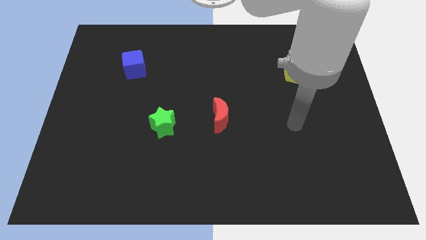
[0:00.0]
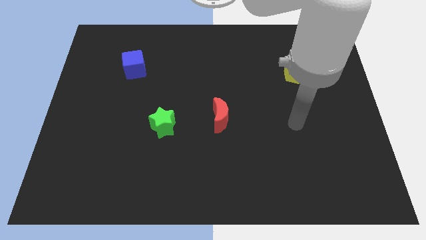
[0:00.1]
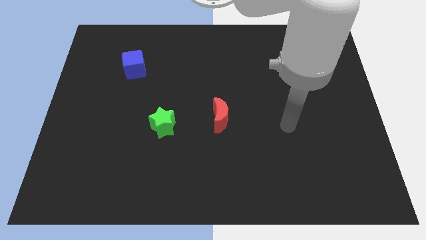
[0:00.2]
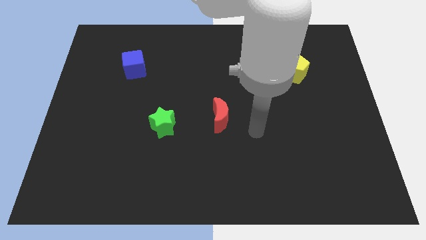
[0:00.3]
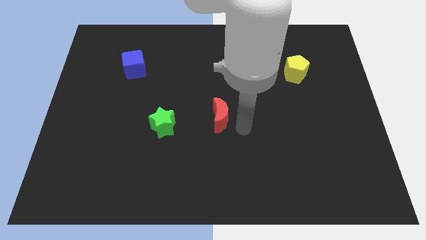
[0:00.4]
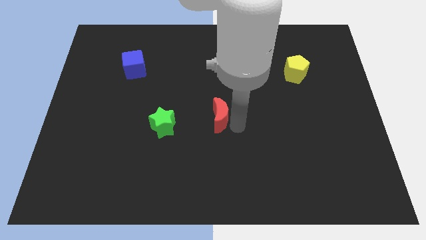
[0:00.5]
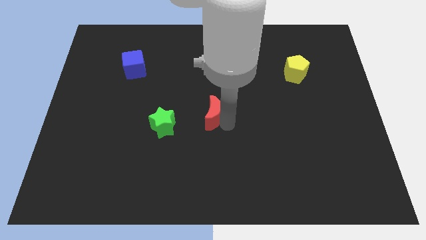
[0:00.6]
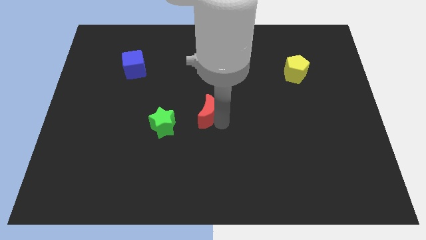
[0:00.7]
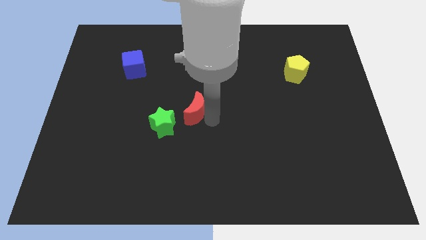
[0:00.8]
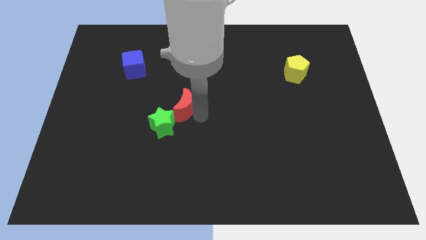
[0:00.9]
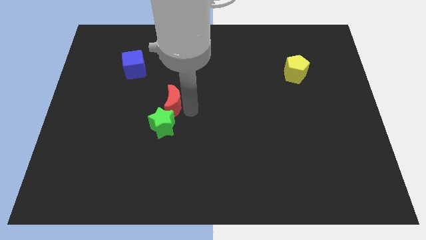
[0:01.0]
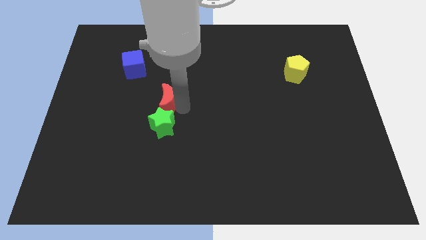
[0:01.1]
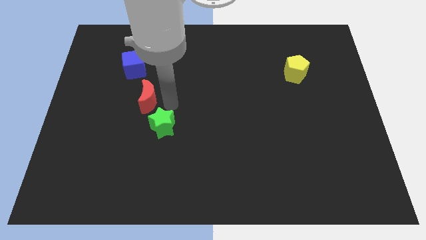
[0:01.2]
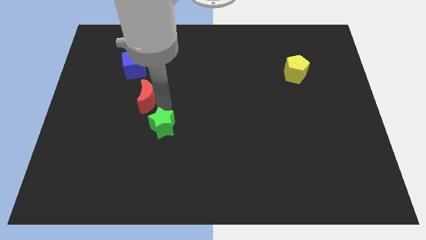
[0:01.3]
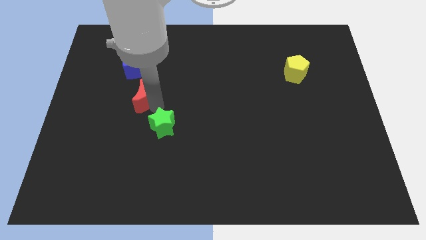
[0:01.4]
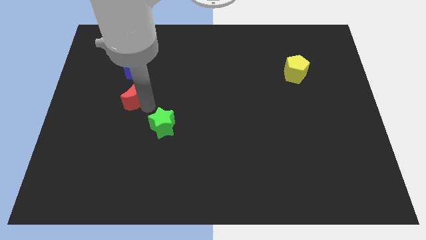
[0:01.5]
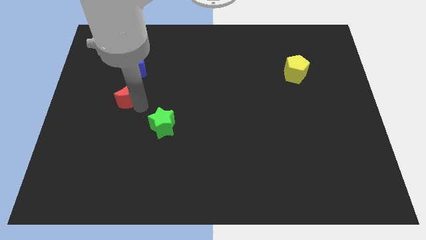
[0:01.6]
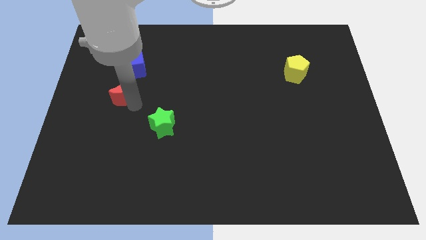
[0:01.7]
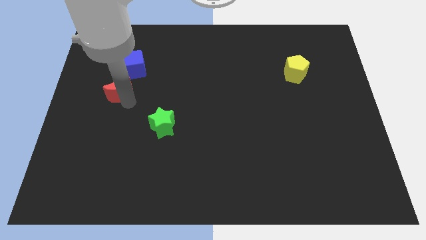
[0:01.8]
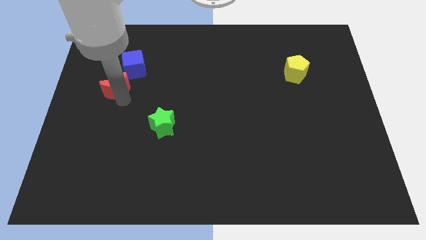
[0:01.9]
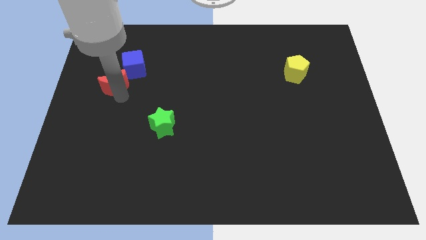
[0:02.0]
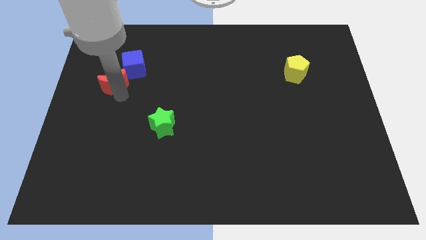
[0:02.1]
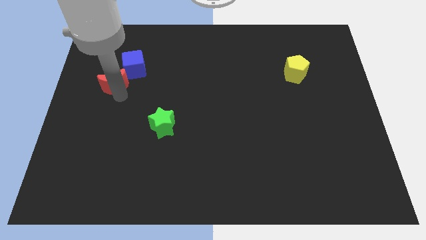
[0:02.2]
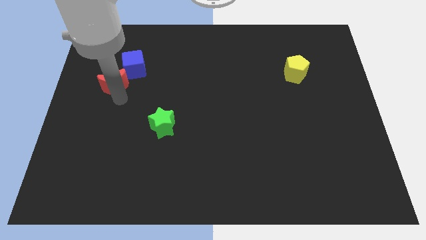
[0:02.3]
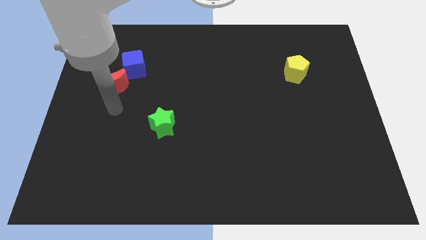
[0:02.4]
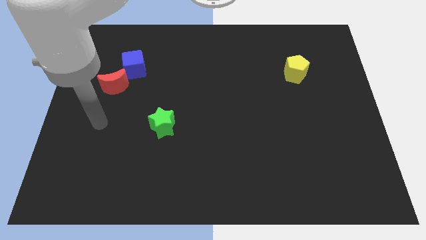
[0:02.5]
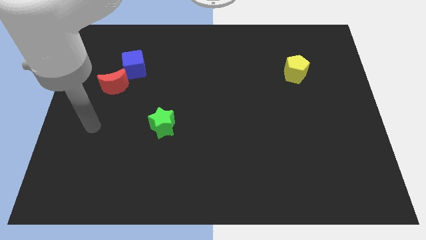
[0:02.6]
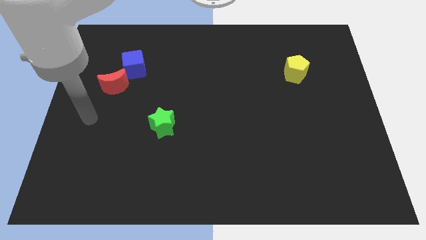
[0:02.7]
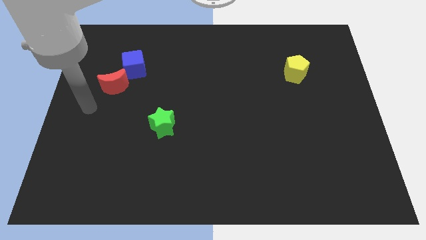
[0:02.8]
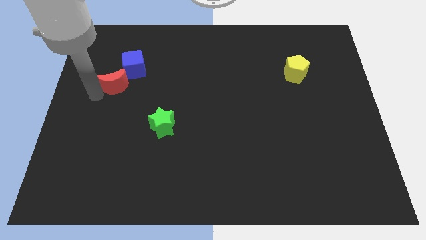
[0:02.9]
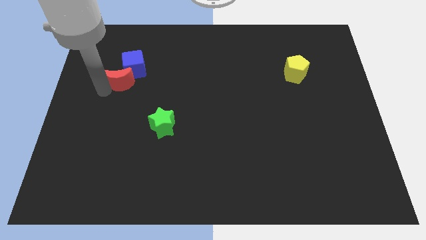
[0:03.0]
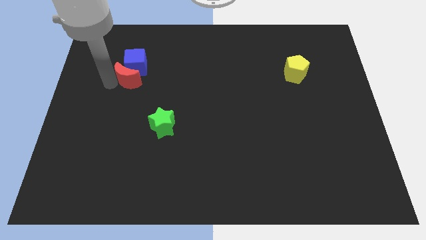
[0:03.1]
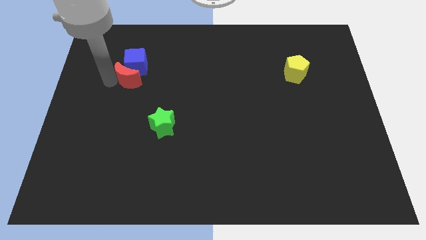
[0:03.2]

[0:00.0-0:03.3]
push the moon close to the blue block

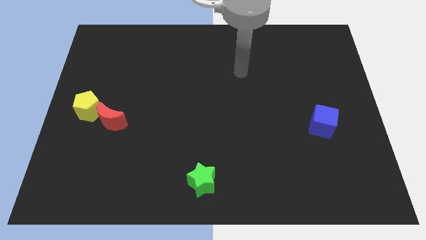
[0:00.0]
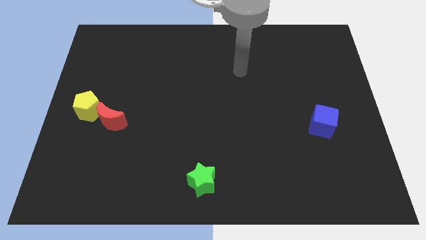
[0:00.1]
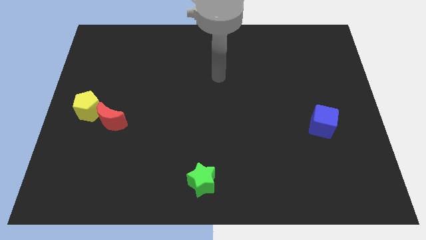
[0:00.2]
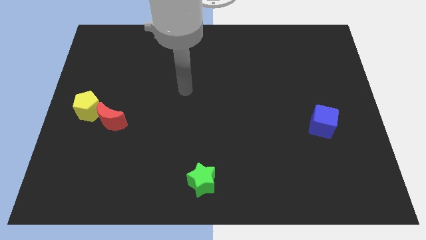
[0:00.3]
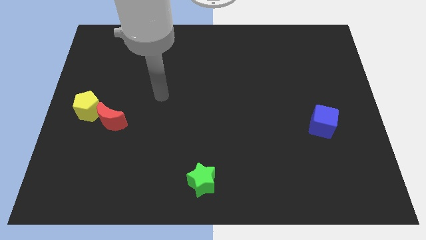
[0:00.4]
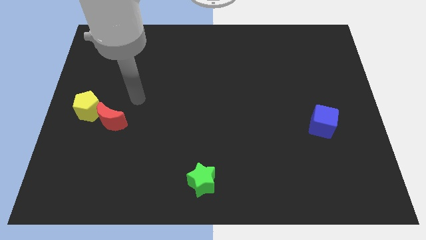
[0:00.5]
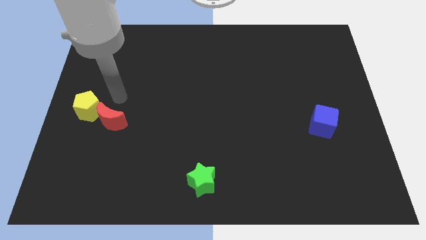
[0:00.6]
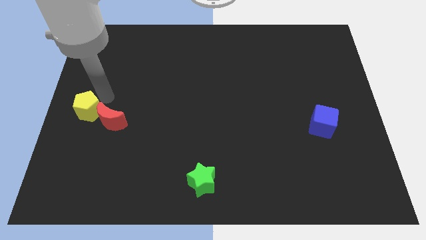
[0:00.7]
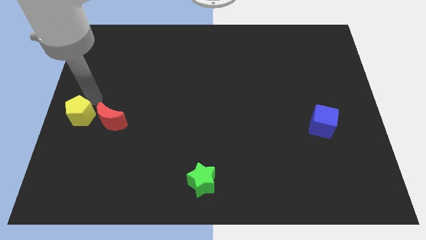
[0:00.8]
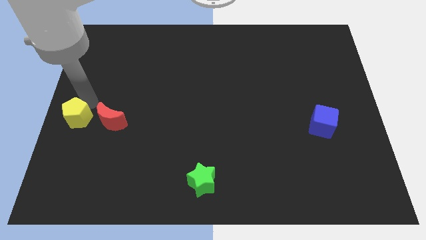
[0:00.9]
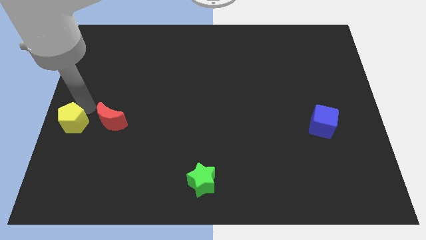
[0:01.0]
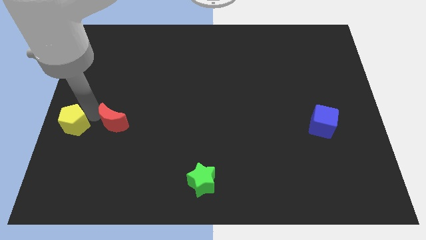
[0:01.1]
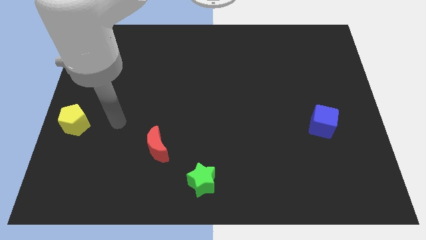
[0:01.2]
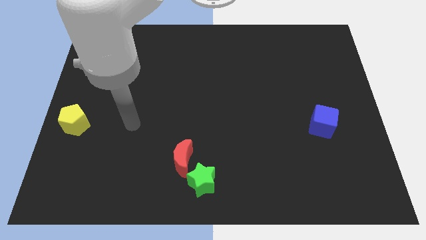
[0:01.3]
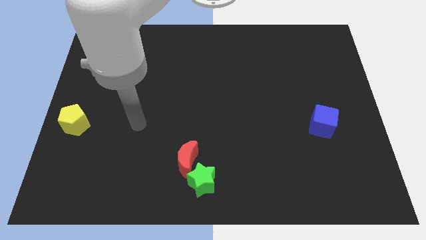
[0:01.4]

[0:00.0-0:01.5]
move the red block towards the green star

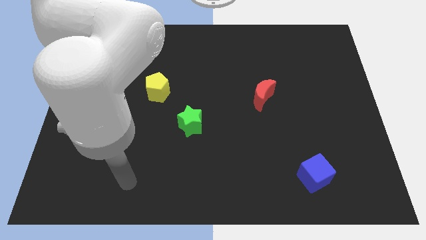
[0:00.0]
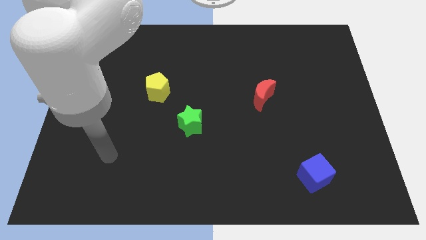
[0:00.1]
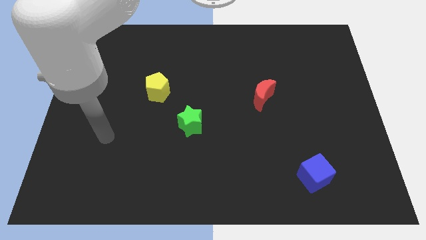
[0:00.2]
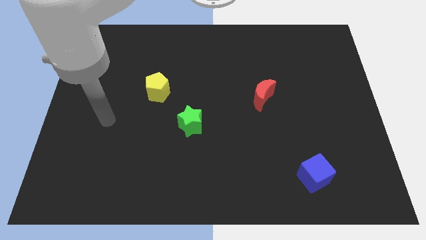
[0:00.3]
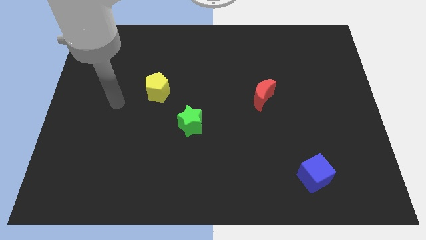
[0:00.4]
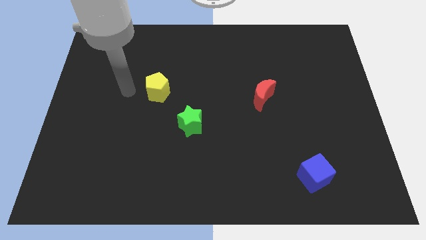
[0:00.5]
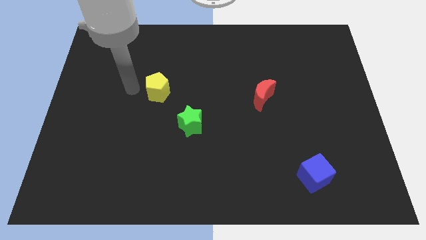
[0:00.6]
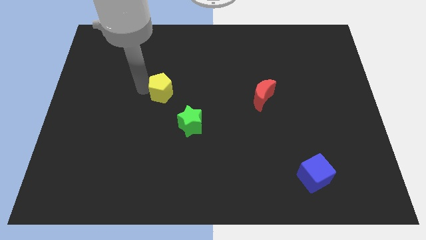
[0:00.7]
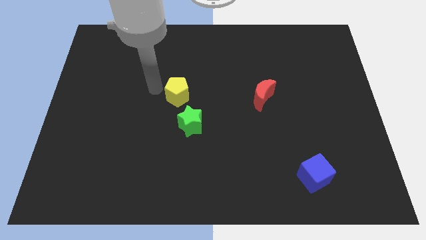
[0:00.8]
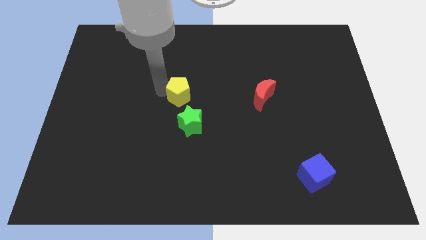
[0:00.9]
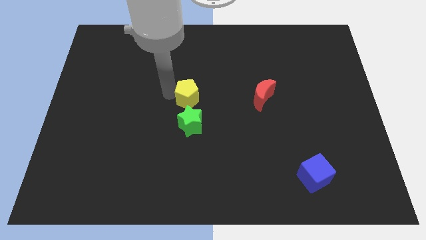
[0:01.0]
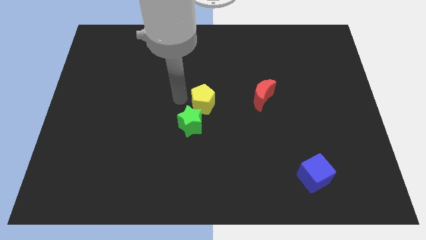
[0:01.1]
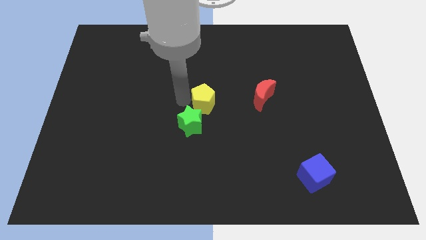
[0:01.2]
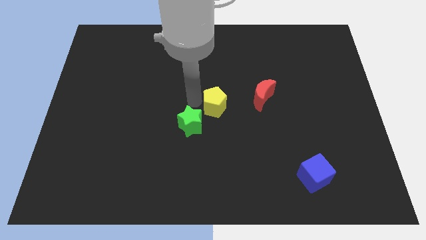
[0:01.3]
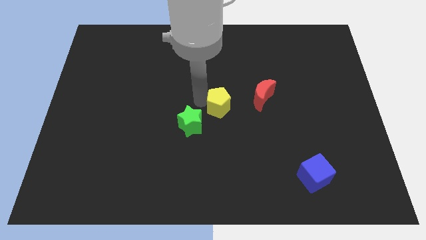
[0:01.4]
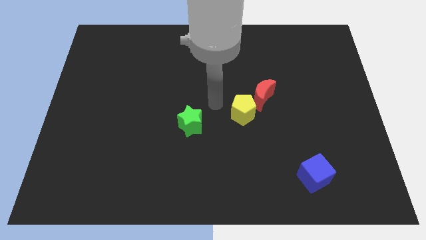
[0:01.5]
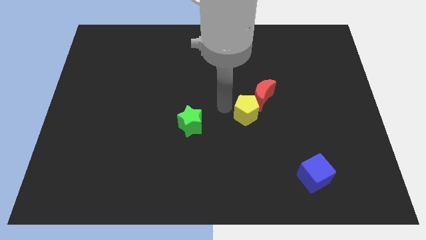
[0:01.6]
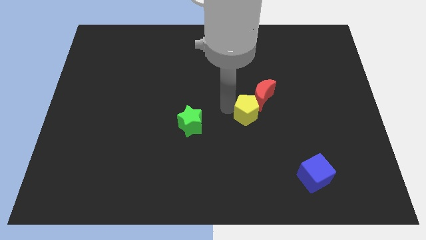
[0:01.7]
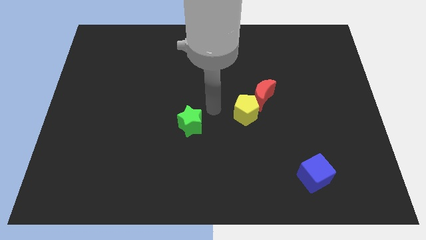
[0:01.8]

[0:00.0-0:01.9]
push the yellow block close to the red moon

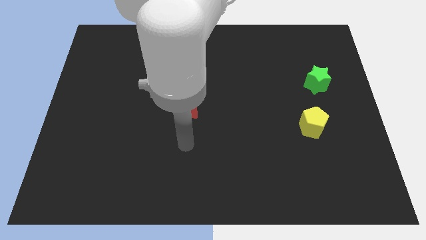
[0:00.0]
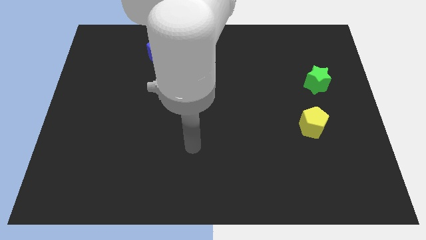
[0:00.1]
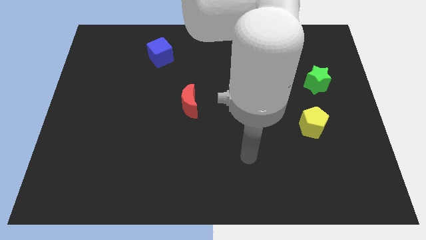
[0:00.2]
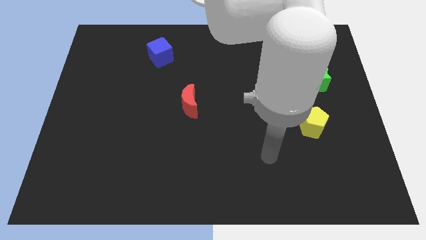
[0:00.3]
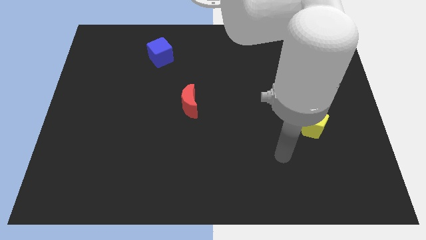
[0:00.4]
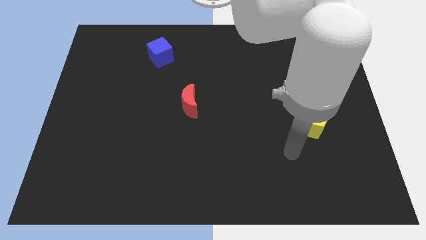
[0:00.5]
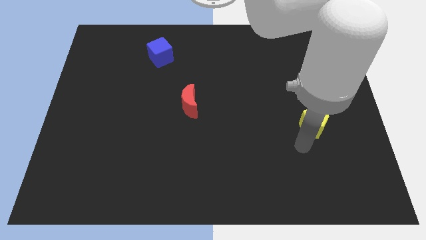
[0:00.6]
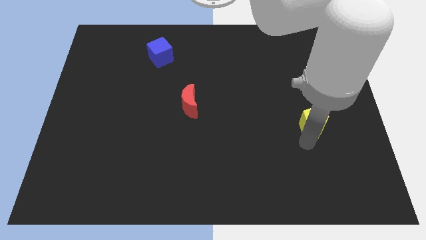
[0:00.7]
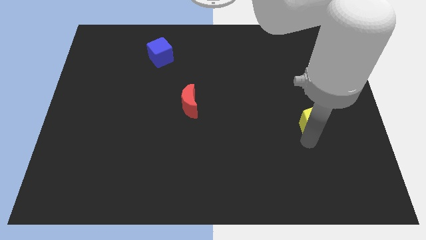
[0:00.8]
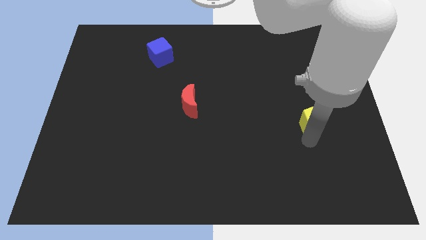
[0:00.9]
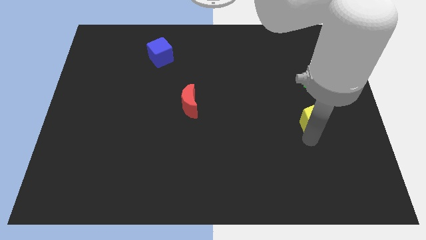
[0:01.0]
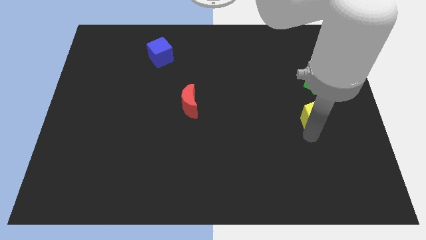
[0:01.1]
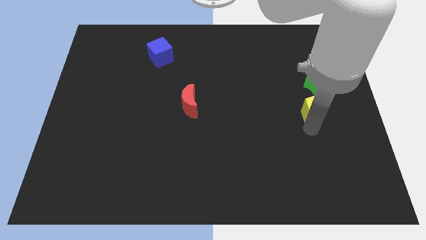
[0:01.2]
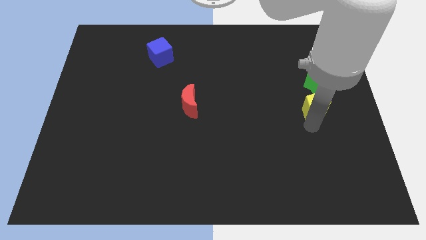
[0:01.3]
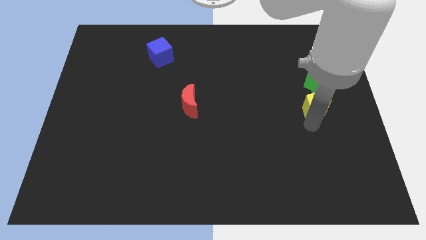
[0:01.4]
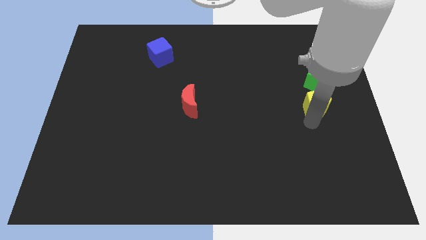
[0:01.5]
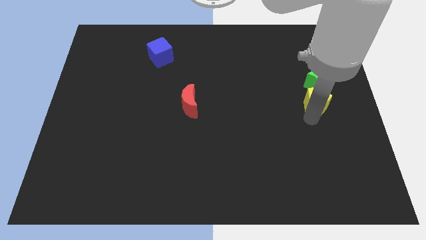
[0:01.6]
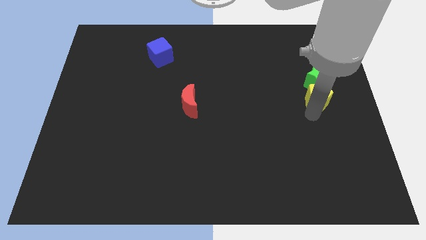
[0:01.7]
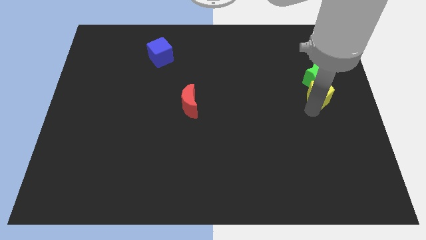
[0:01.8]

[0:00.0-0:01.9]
push the yellow pentagon to the green block
